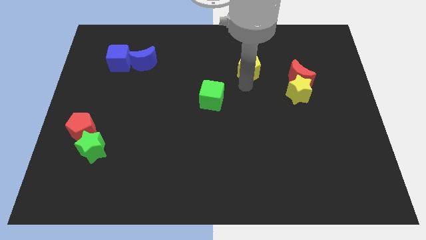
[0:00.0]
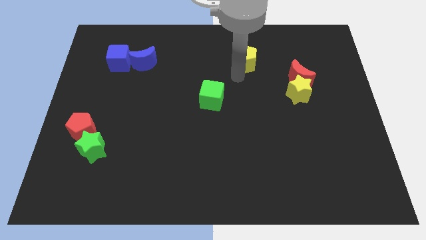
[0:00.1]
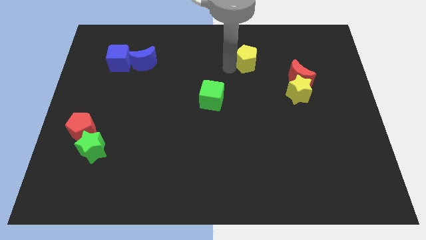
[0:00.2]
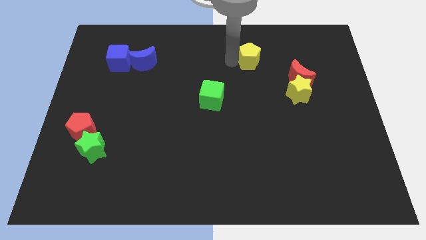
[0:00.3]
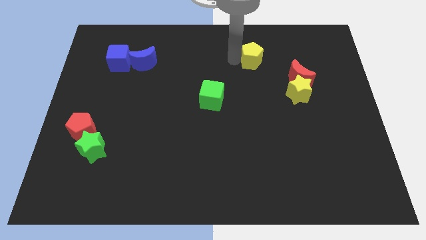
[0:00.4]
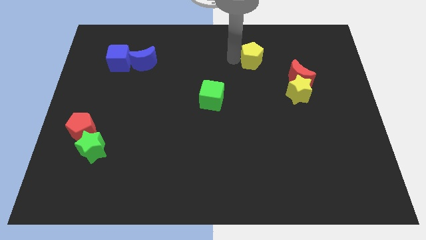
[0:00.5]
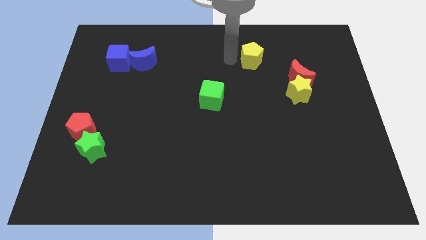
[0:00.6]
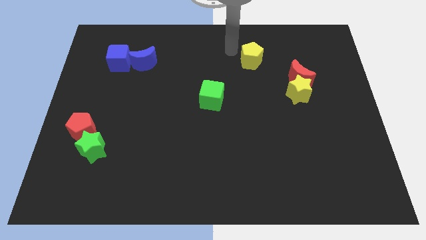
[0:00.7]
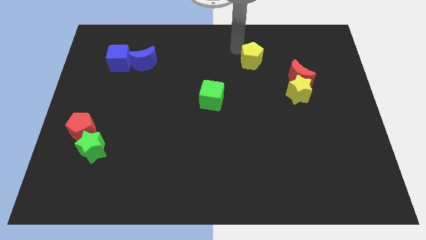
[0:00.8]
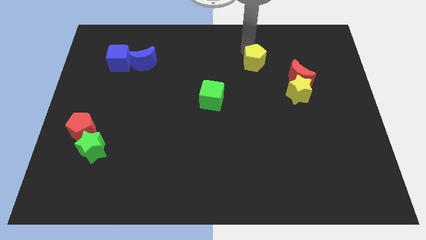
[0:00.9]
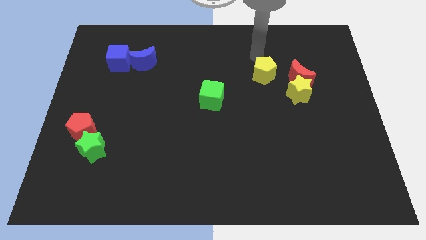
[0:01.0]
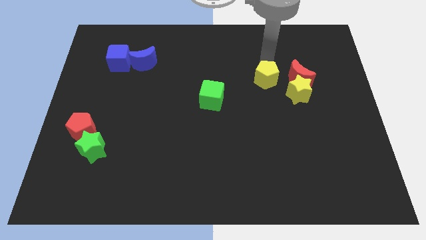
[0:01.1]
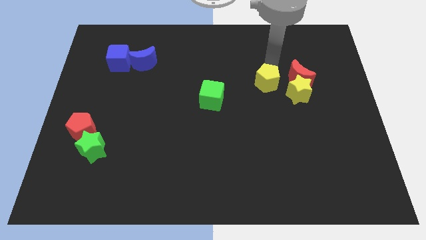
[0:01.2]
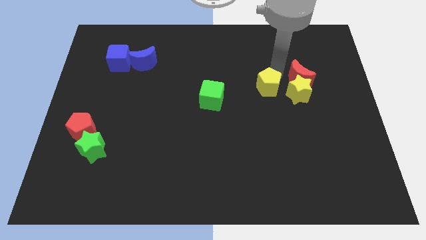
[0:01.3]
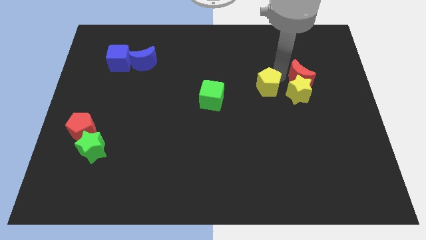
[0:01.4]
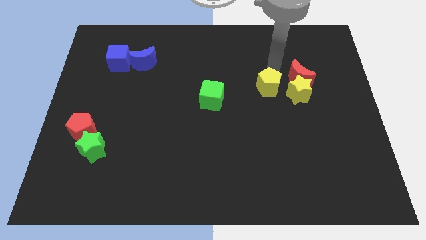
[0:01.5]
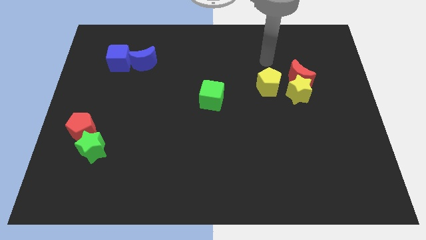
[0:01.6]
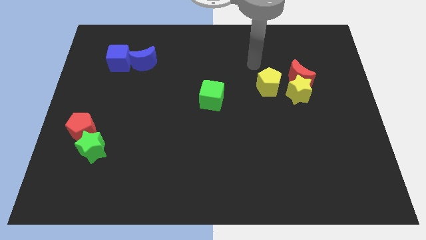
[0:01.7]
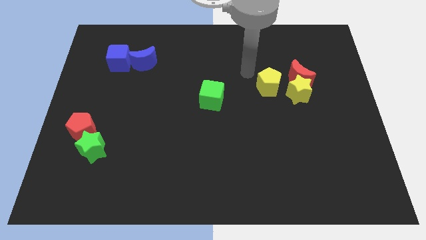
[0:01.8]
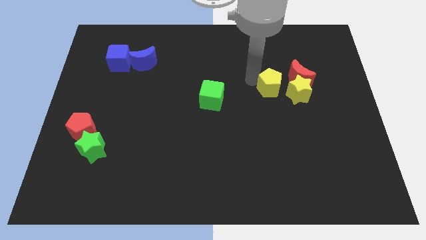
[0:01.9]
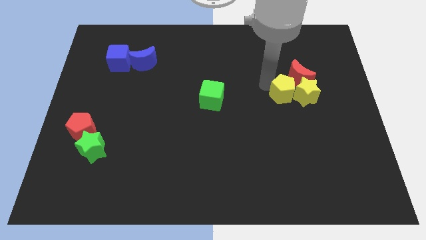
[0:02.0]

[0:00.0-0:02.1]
push the yellow pentagon to the left of the yellow star

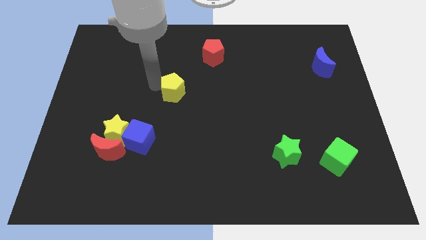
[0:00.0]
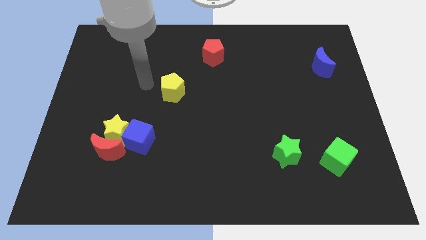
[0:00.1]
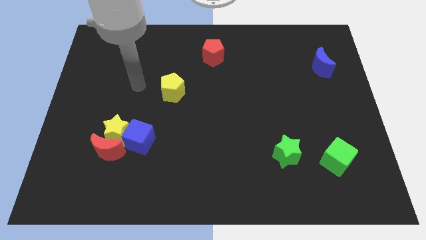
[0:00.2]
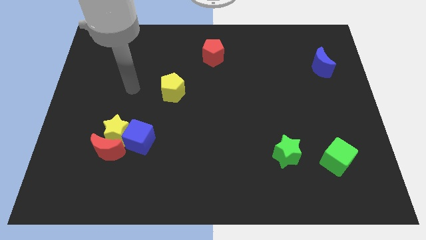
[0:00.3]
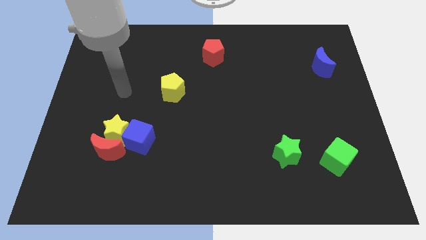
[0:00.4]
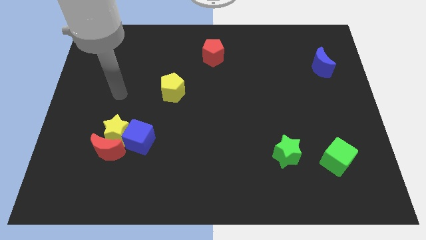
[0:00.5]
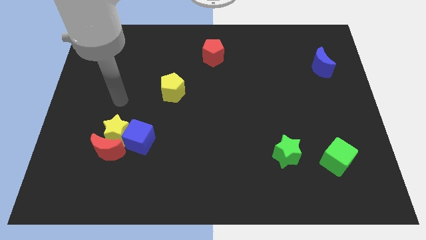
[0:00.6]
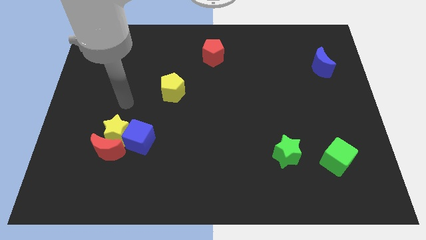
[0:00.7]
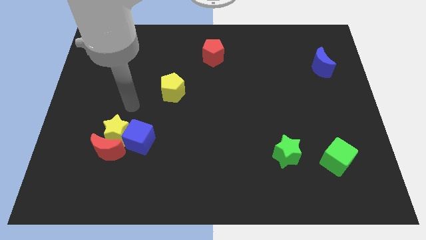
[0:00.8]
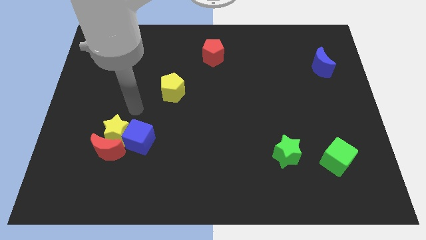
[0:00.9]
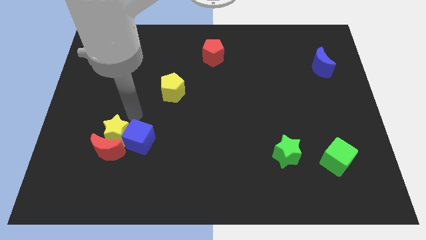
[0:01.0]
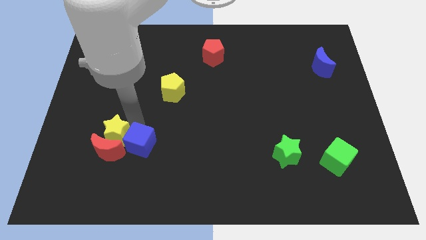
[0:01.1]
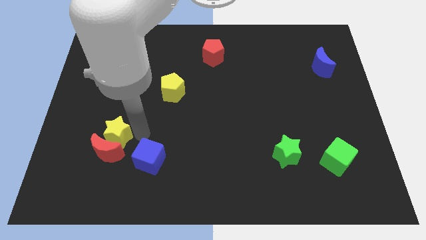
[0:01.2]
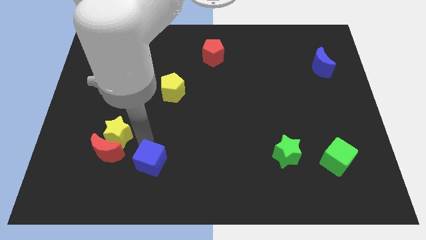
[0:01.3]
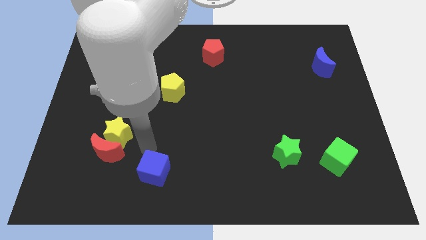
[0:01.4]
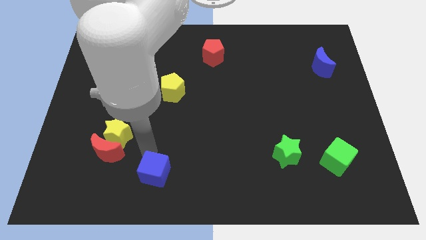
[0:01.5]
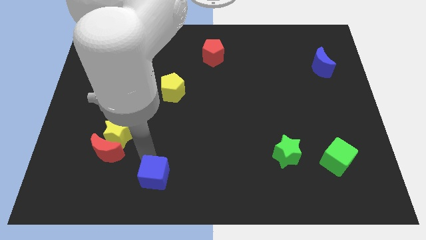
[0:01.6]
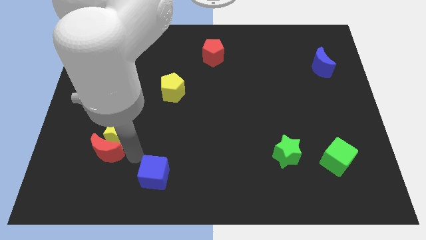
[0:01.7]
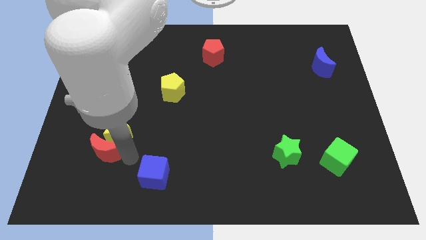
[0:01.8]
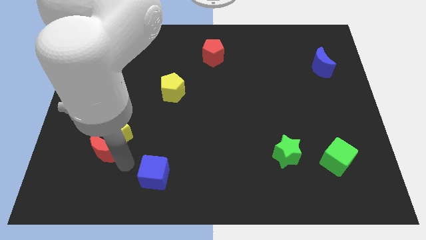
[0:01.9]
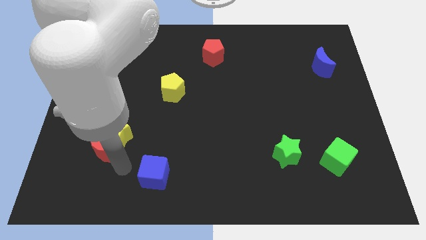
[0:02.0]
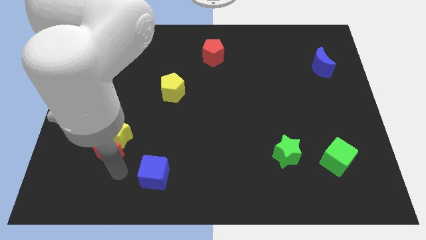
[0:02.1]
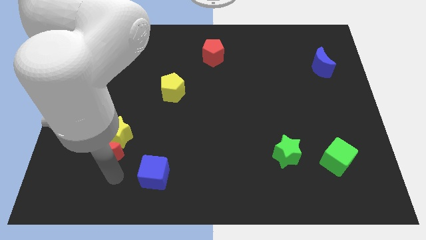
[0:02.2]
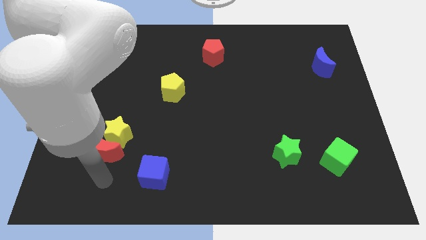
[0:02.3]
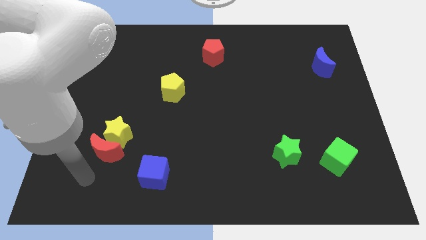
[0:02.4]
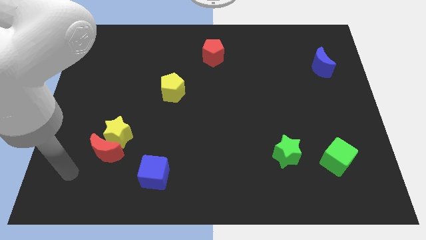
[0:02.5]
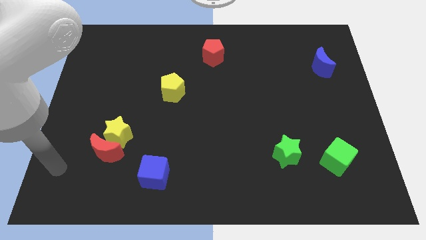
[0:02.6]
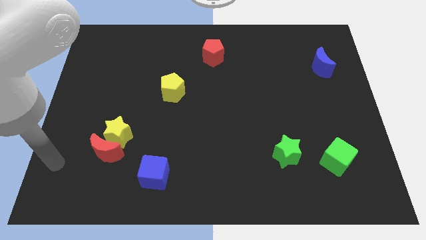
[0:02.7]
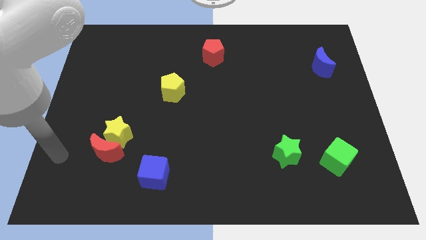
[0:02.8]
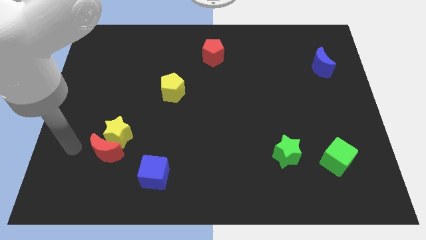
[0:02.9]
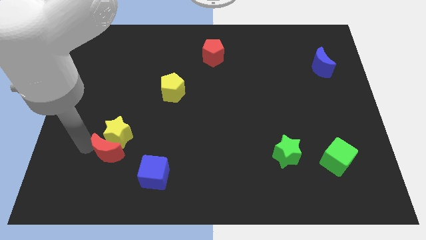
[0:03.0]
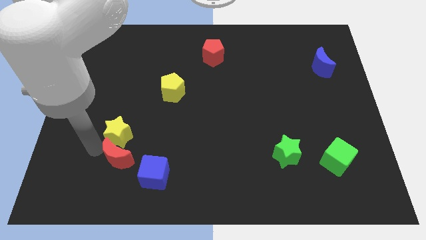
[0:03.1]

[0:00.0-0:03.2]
push the blue cube towards the bottom center

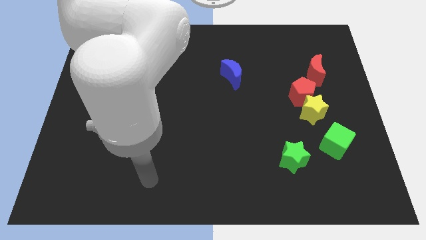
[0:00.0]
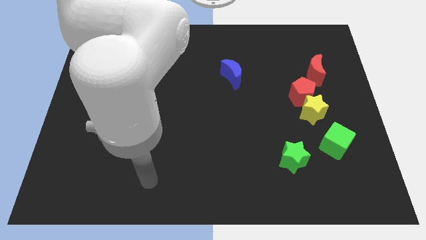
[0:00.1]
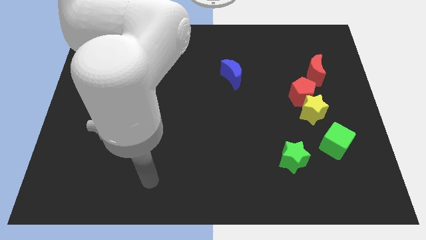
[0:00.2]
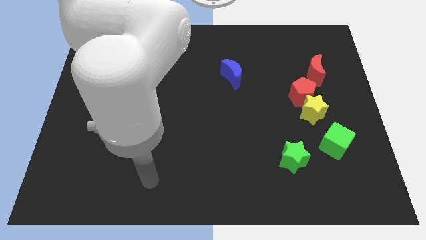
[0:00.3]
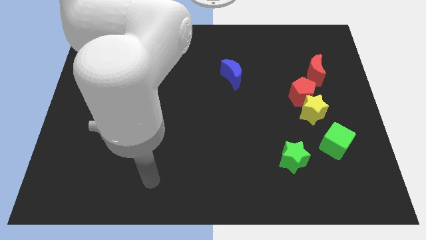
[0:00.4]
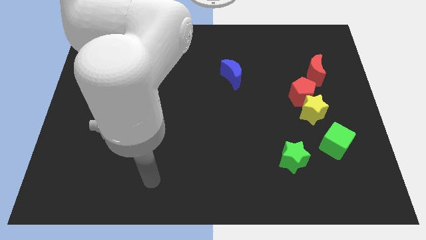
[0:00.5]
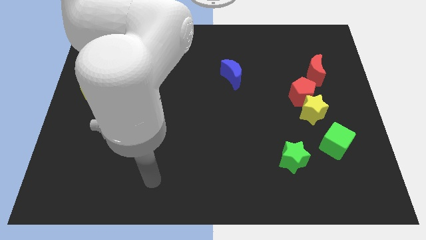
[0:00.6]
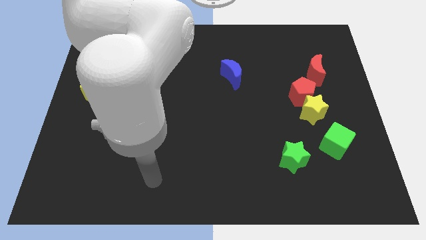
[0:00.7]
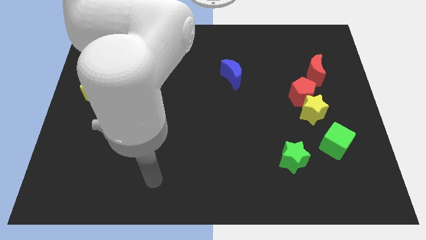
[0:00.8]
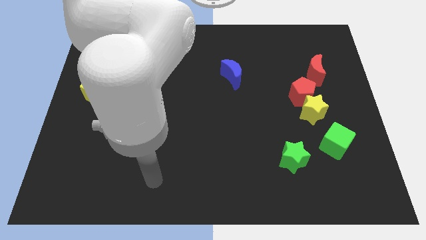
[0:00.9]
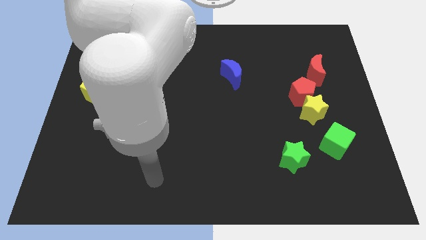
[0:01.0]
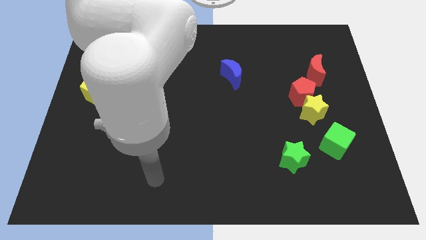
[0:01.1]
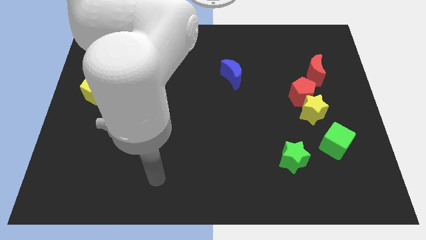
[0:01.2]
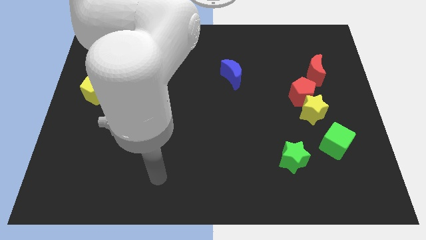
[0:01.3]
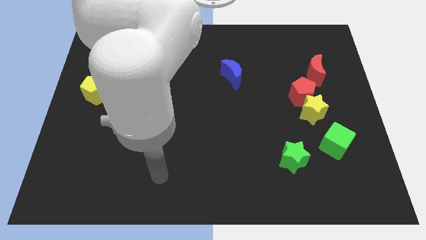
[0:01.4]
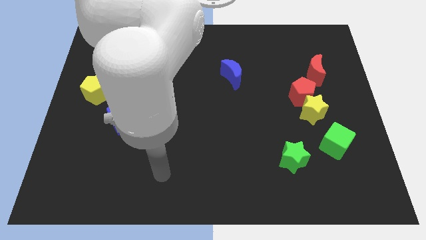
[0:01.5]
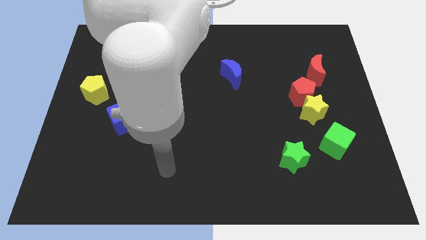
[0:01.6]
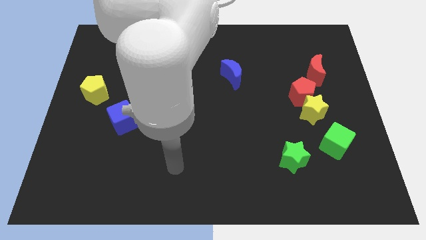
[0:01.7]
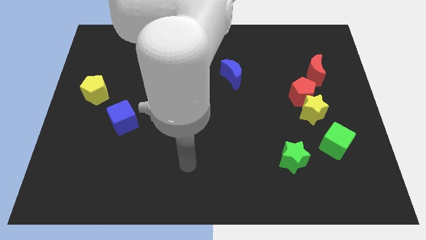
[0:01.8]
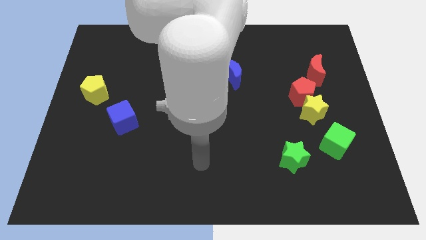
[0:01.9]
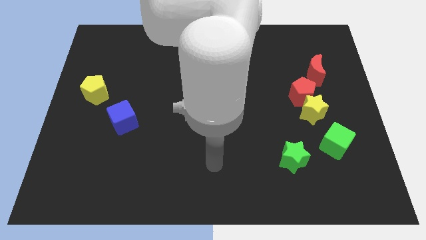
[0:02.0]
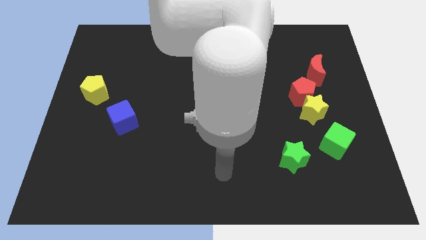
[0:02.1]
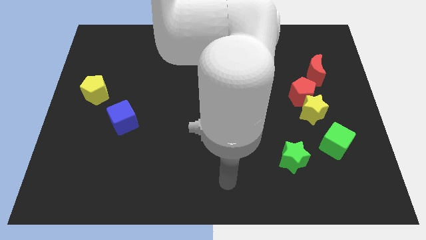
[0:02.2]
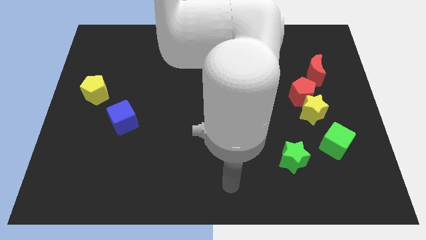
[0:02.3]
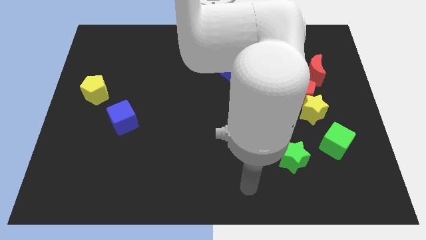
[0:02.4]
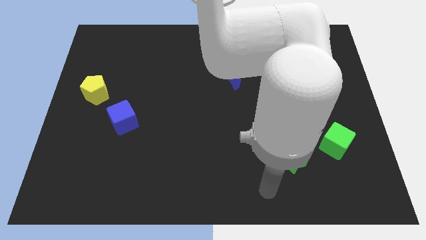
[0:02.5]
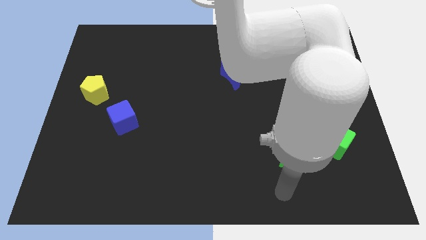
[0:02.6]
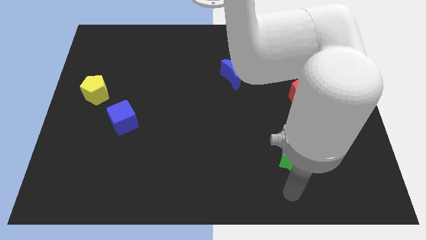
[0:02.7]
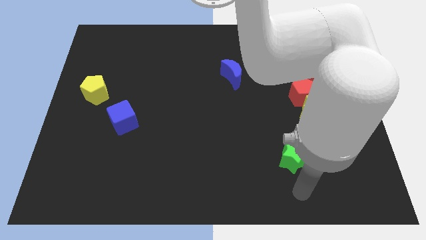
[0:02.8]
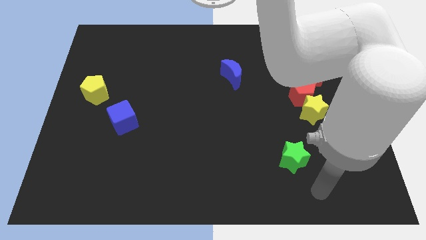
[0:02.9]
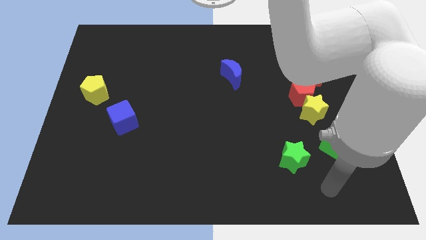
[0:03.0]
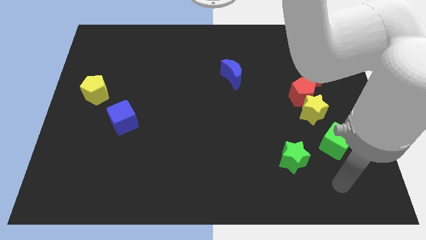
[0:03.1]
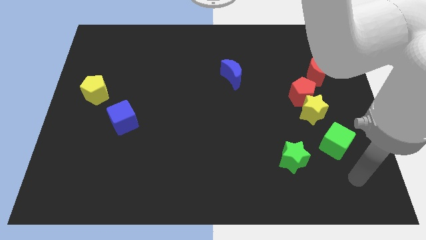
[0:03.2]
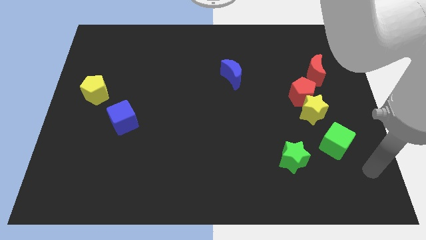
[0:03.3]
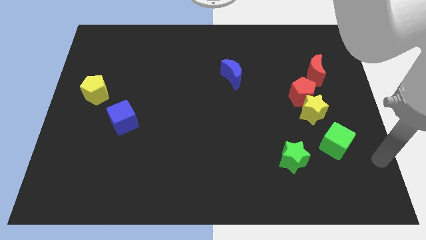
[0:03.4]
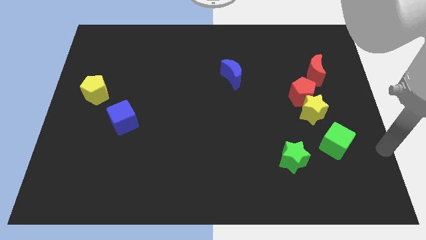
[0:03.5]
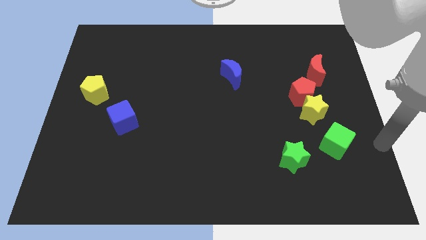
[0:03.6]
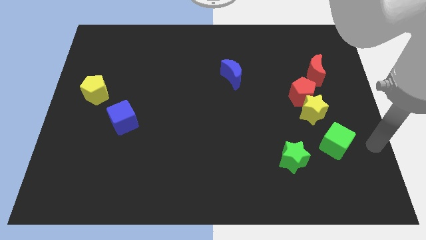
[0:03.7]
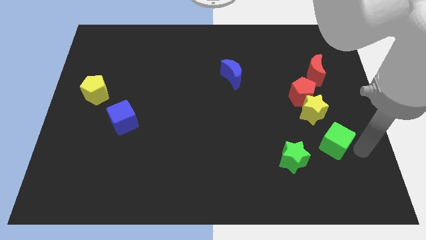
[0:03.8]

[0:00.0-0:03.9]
place your arm at the right of the green cube
